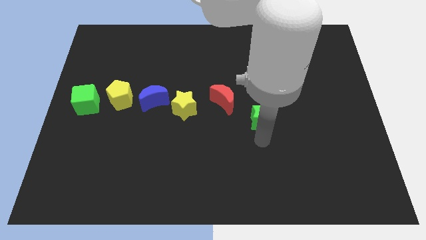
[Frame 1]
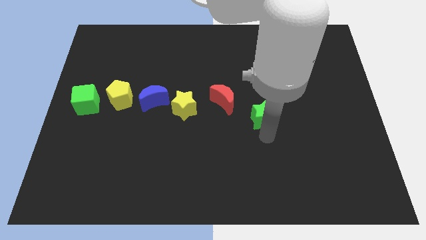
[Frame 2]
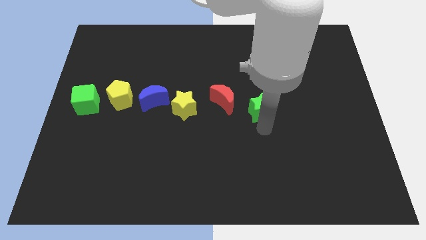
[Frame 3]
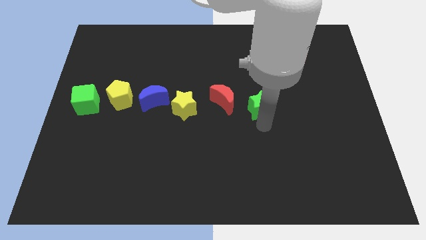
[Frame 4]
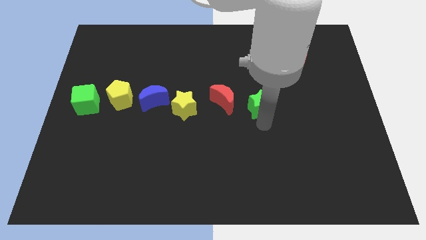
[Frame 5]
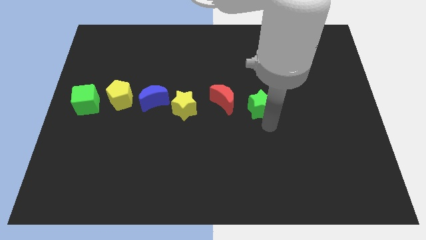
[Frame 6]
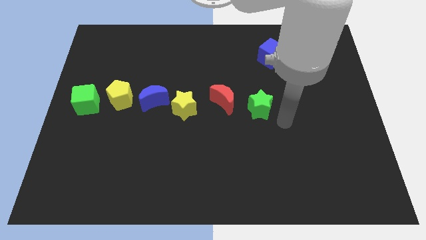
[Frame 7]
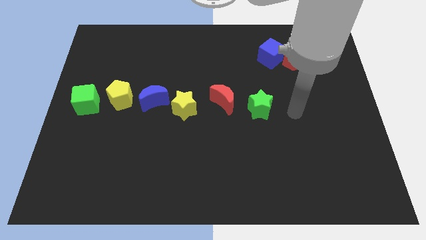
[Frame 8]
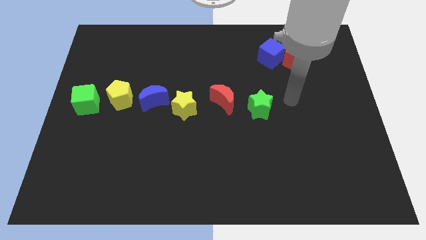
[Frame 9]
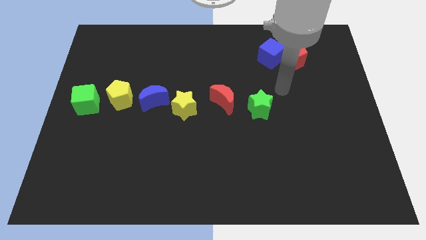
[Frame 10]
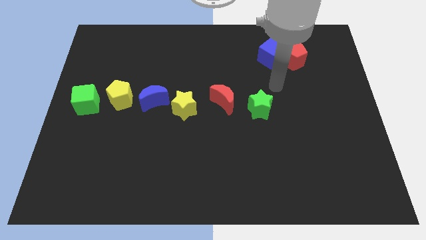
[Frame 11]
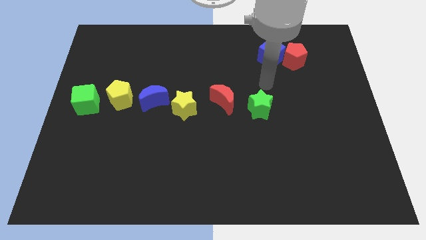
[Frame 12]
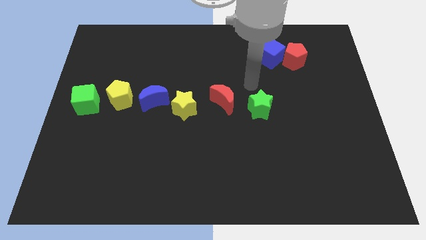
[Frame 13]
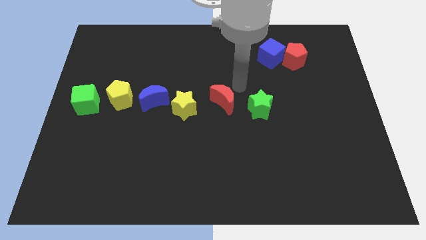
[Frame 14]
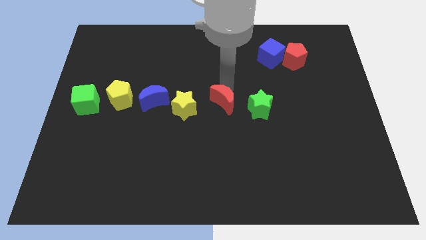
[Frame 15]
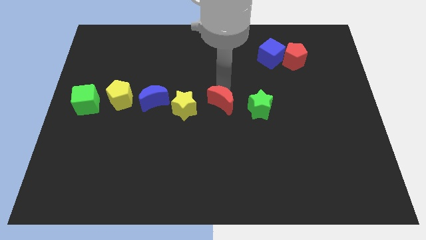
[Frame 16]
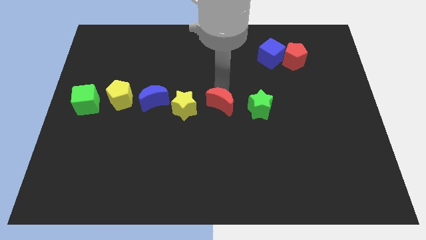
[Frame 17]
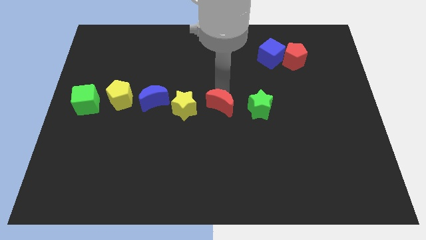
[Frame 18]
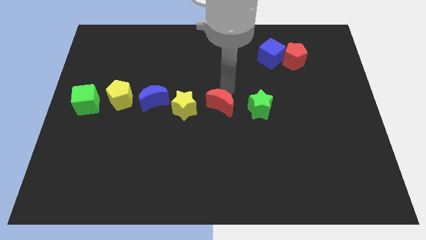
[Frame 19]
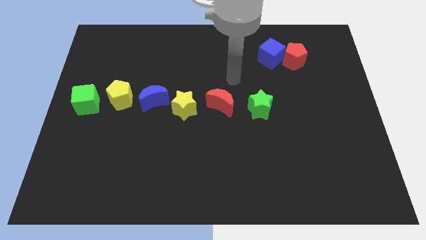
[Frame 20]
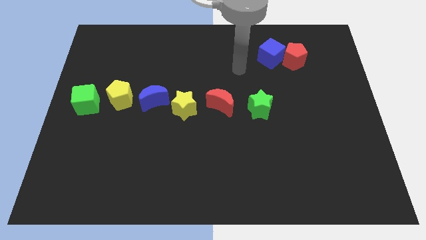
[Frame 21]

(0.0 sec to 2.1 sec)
adjust green star and red moon in a horizontal line

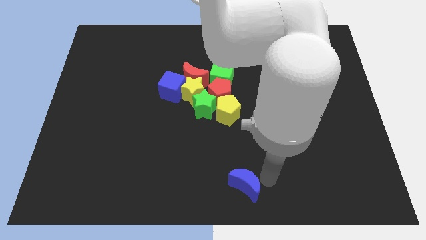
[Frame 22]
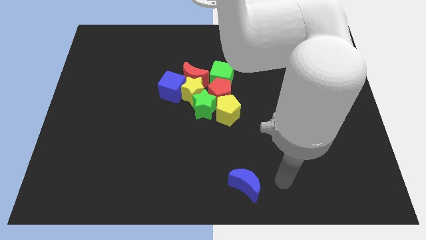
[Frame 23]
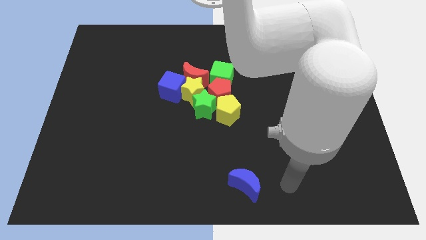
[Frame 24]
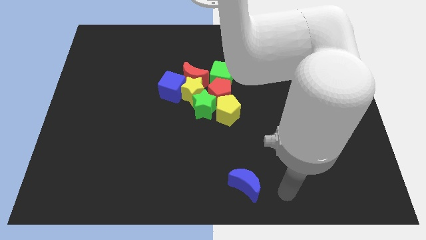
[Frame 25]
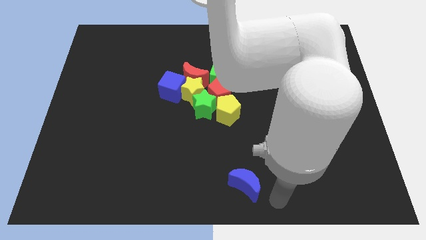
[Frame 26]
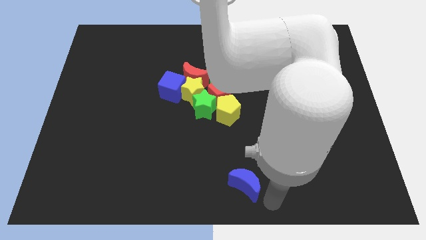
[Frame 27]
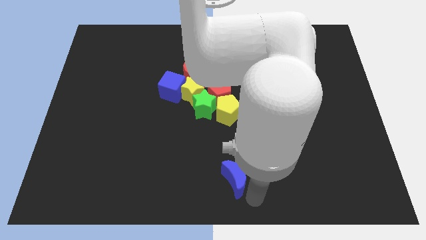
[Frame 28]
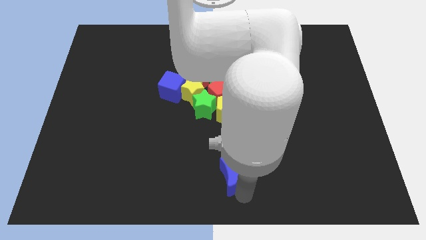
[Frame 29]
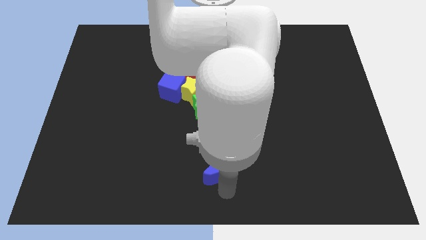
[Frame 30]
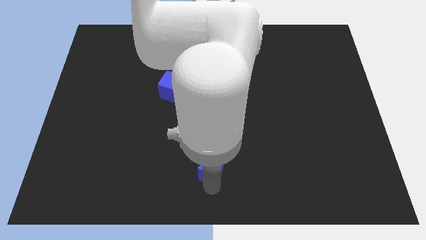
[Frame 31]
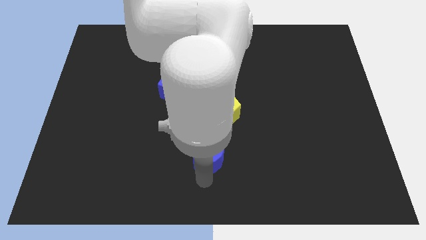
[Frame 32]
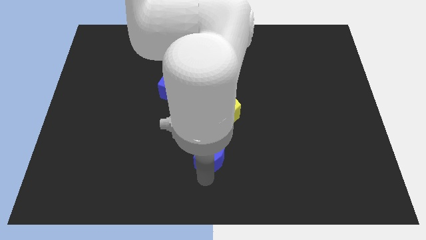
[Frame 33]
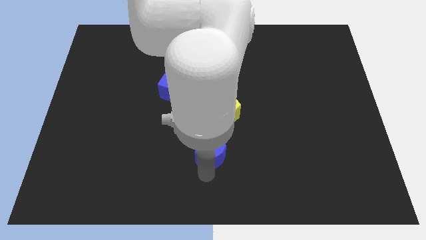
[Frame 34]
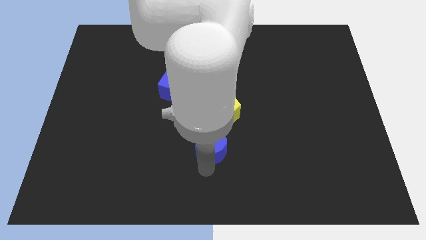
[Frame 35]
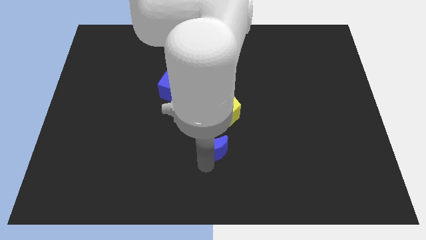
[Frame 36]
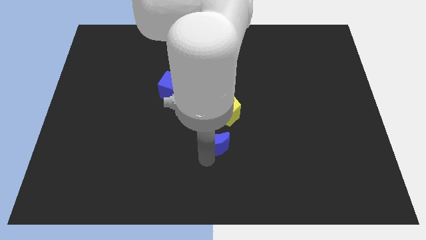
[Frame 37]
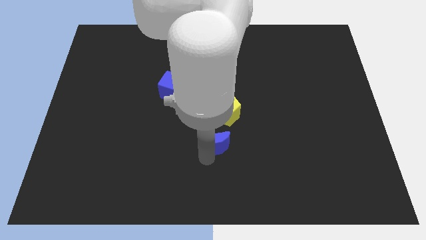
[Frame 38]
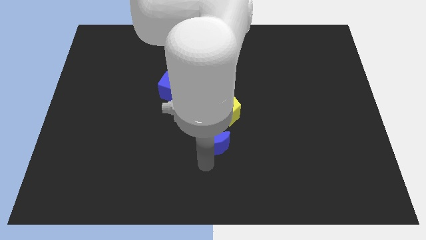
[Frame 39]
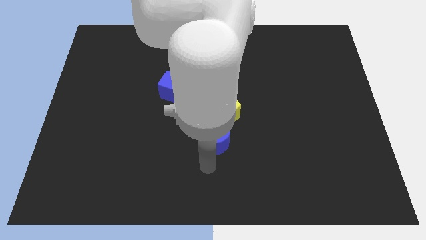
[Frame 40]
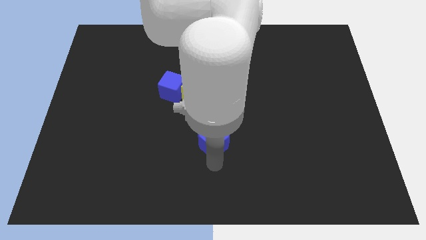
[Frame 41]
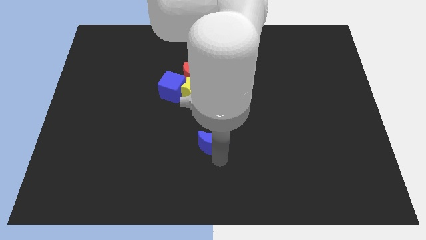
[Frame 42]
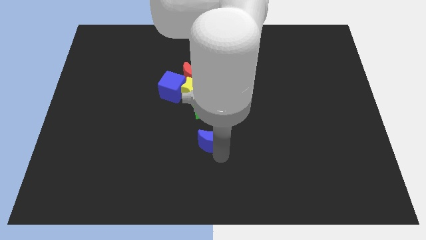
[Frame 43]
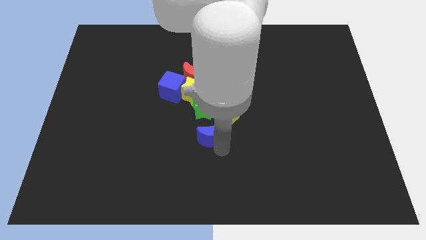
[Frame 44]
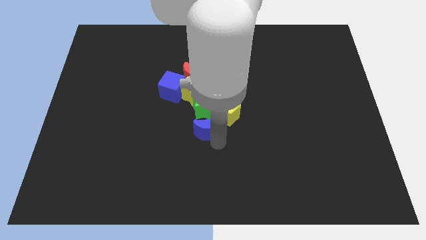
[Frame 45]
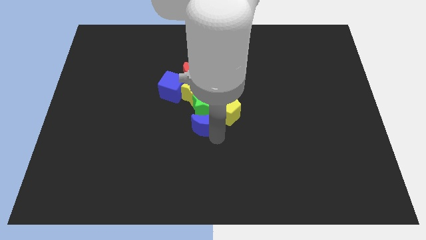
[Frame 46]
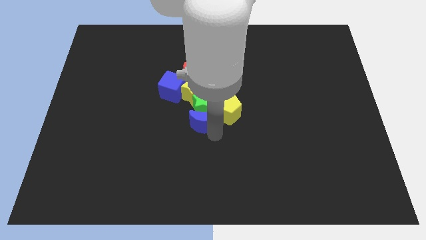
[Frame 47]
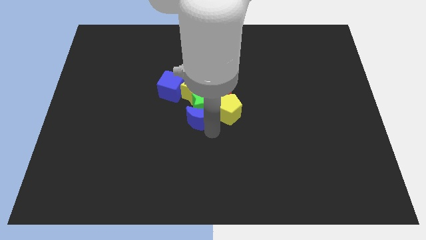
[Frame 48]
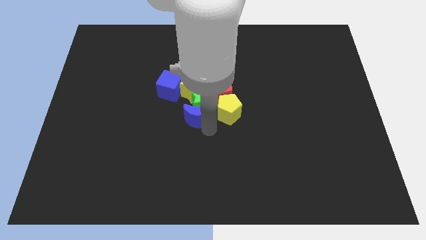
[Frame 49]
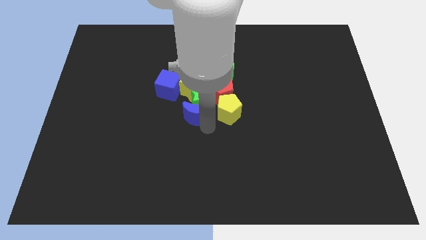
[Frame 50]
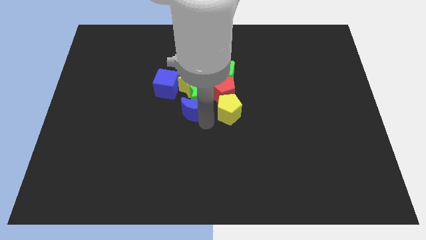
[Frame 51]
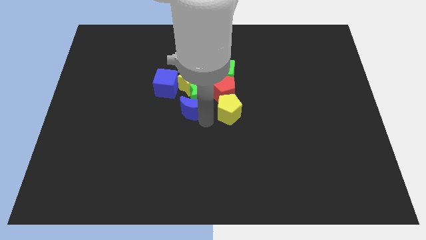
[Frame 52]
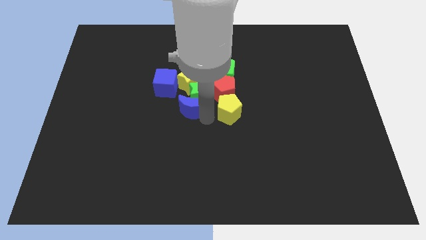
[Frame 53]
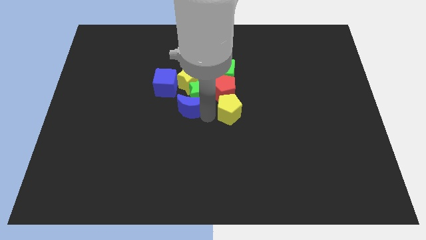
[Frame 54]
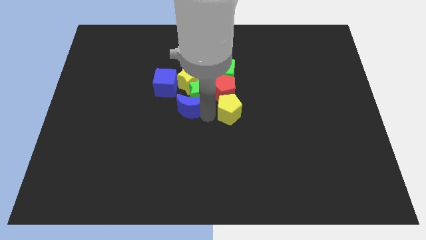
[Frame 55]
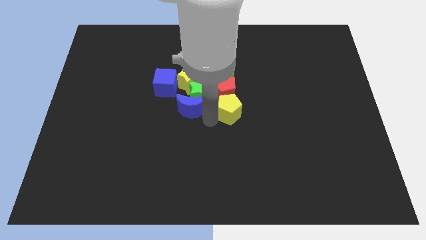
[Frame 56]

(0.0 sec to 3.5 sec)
push the blue moon into the green star

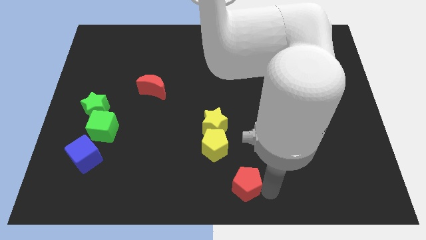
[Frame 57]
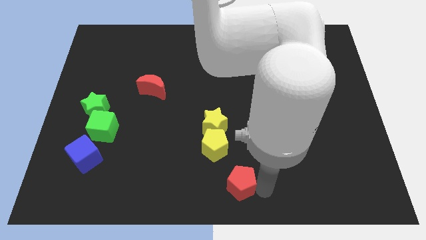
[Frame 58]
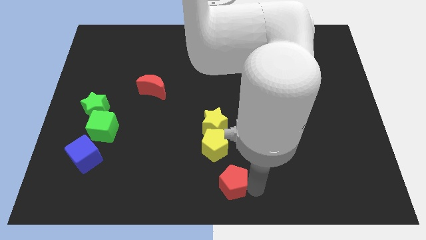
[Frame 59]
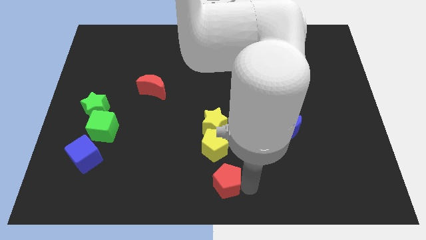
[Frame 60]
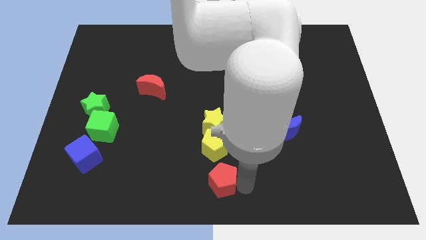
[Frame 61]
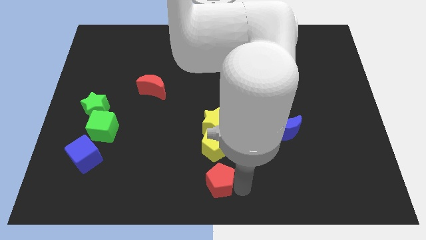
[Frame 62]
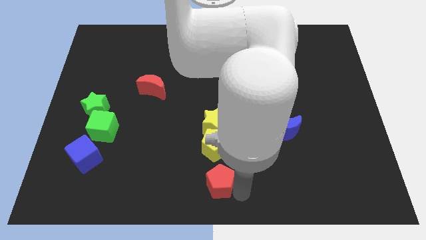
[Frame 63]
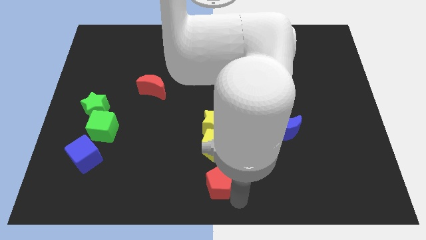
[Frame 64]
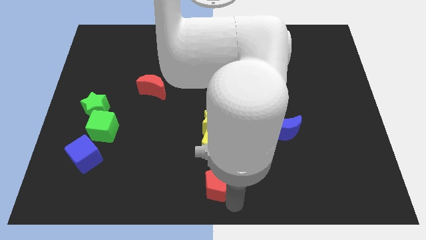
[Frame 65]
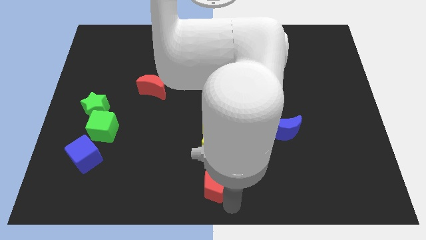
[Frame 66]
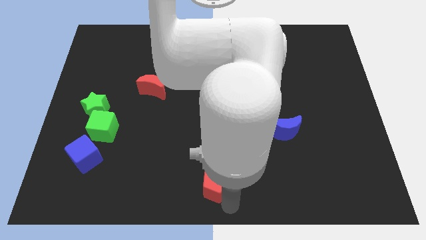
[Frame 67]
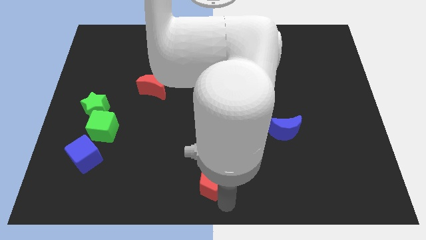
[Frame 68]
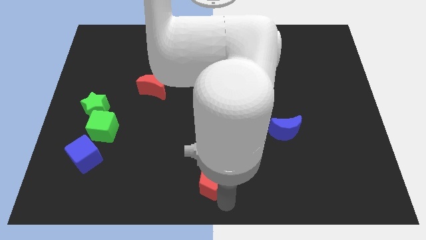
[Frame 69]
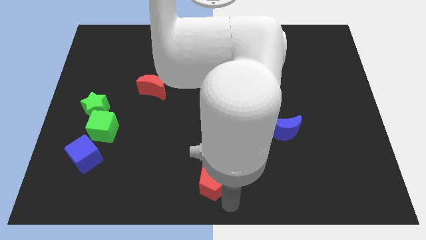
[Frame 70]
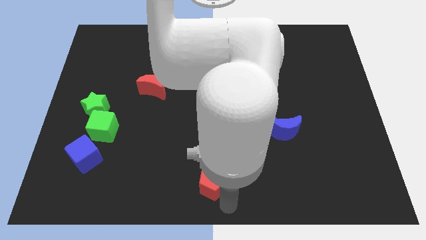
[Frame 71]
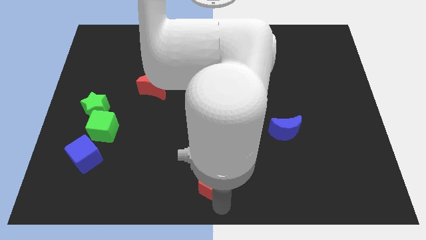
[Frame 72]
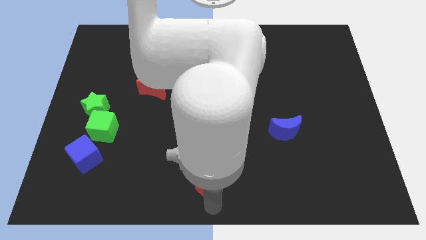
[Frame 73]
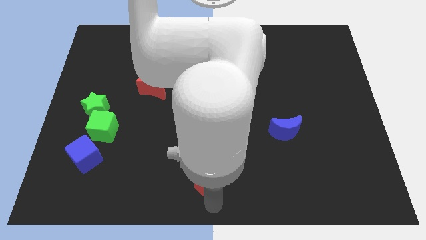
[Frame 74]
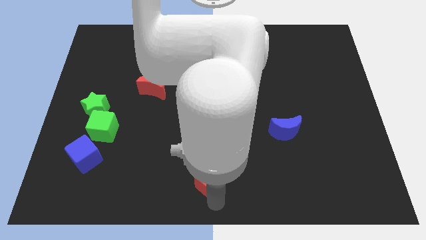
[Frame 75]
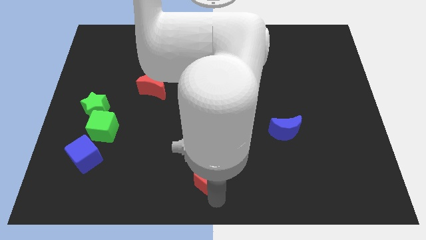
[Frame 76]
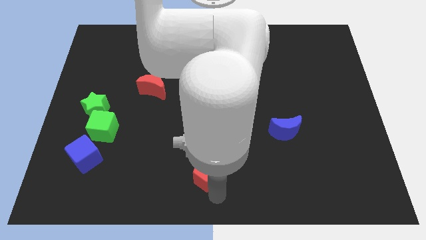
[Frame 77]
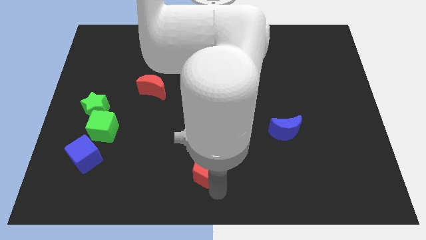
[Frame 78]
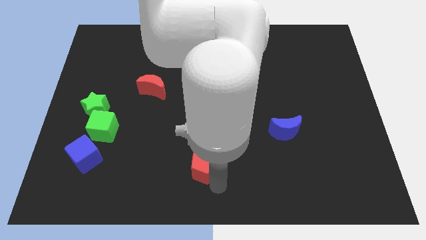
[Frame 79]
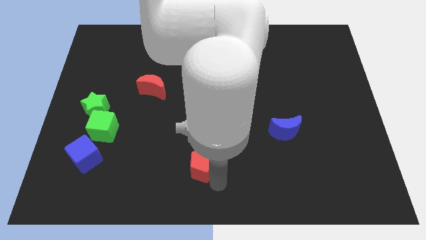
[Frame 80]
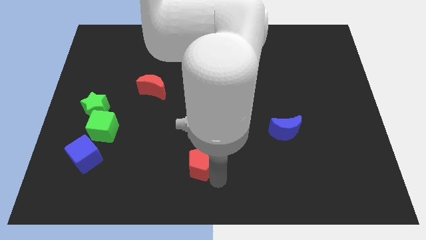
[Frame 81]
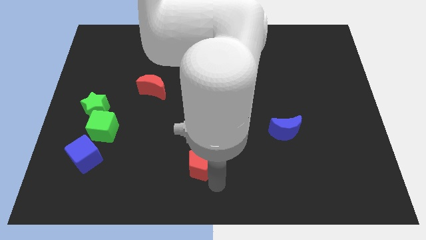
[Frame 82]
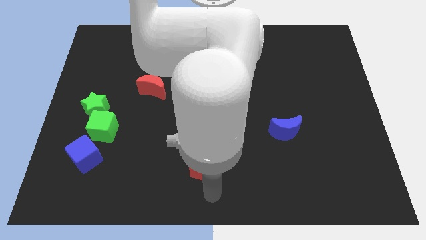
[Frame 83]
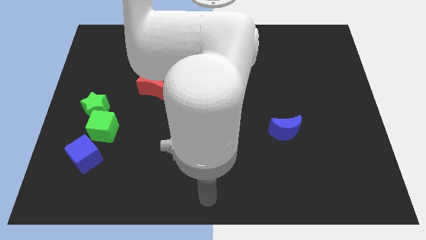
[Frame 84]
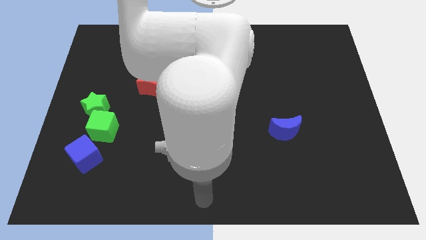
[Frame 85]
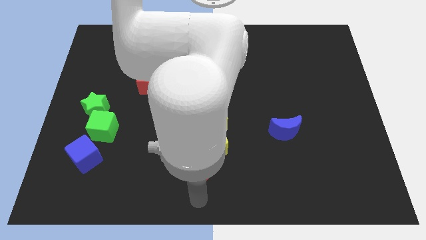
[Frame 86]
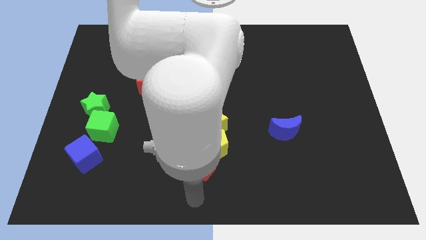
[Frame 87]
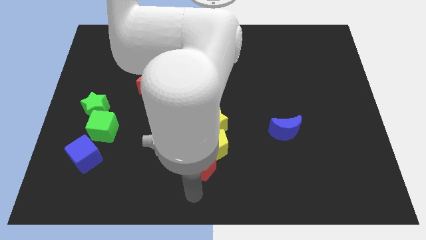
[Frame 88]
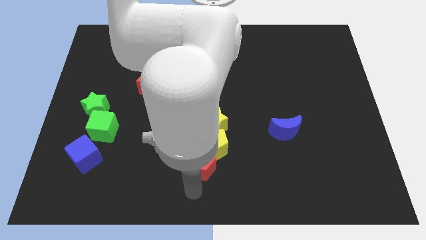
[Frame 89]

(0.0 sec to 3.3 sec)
place red pentagon below yellow pentagon

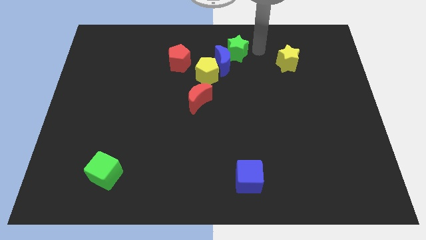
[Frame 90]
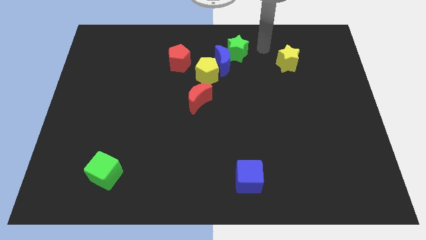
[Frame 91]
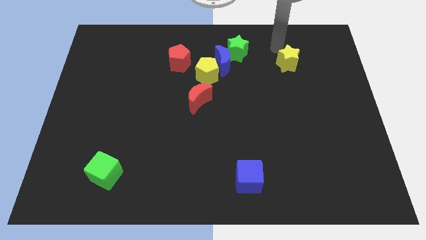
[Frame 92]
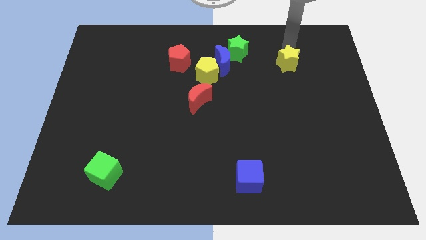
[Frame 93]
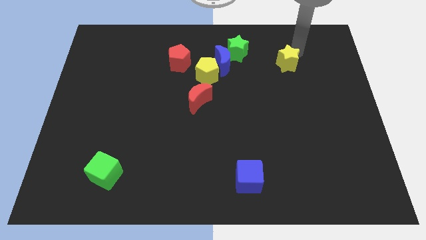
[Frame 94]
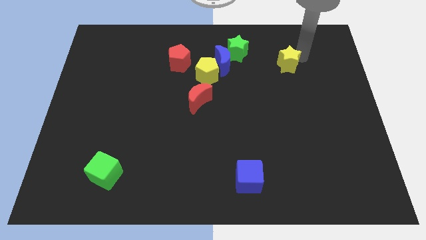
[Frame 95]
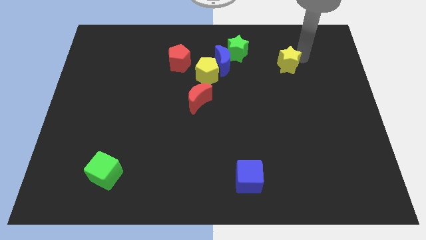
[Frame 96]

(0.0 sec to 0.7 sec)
place the arm near the yellow star
